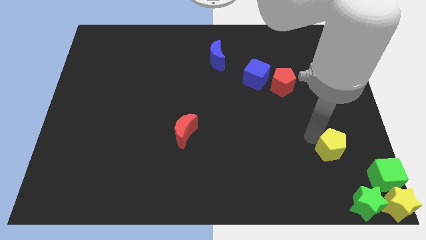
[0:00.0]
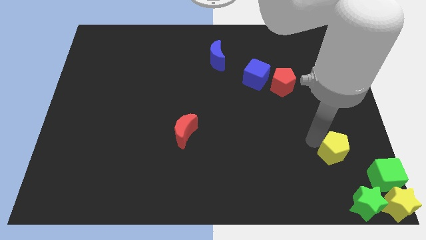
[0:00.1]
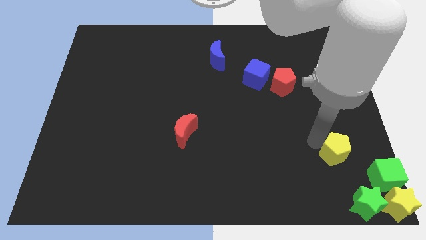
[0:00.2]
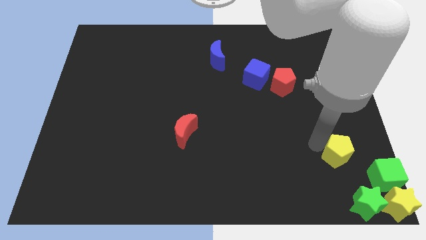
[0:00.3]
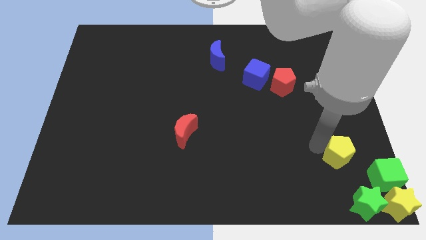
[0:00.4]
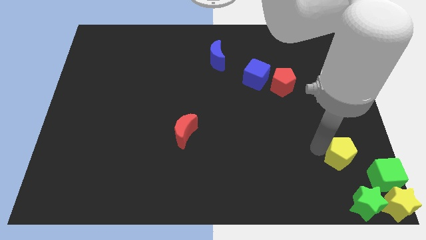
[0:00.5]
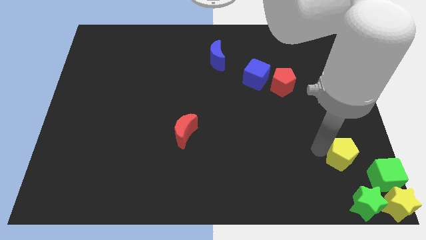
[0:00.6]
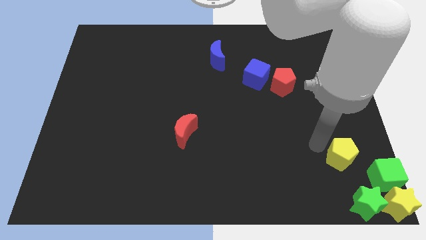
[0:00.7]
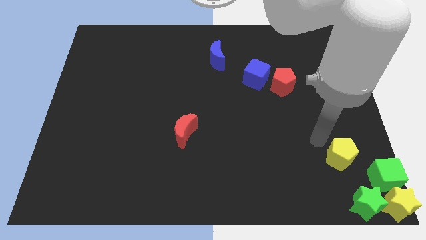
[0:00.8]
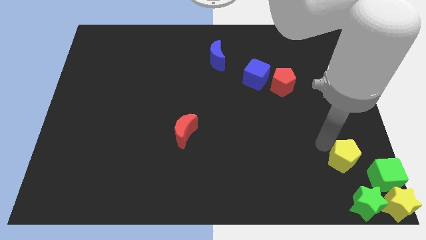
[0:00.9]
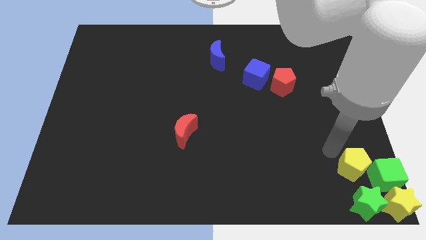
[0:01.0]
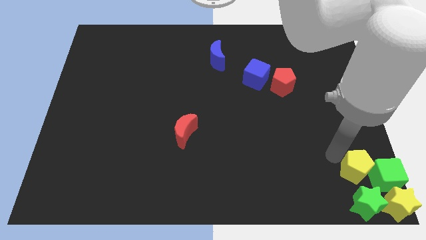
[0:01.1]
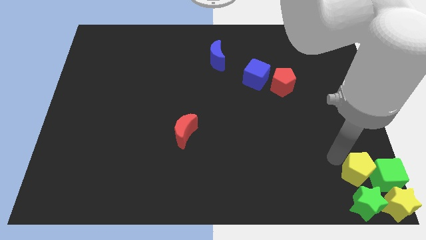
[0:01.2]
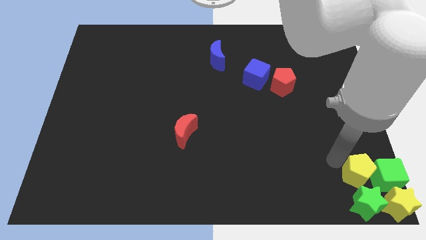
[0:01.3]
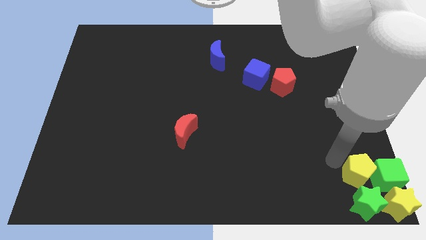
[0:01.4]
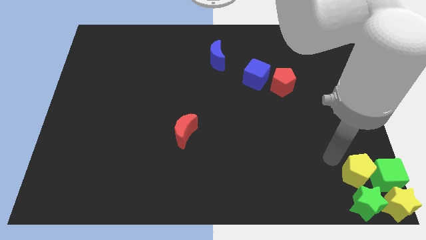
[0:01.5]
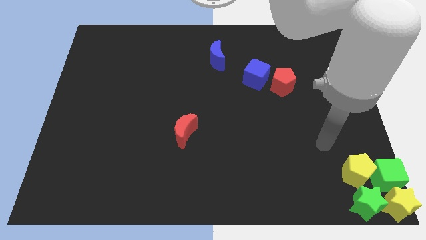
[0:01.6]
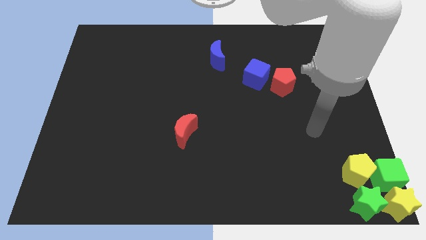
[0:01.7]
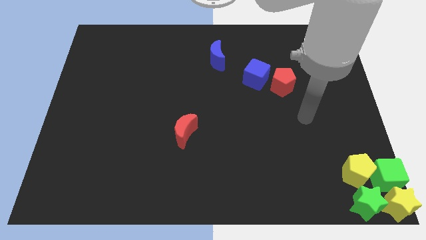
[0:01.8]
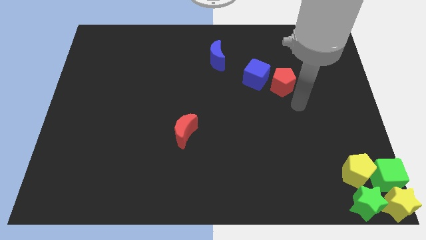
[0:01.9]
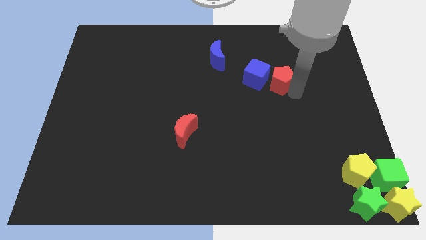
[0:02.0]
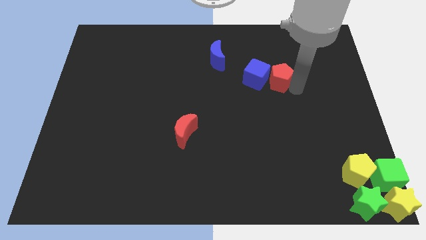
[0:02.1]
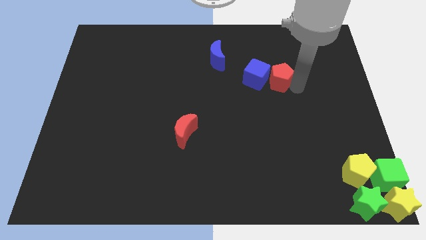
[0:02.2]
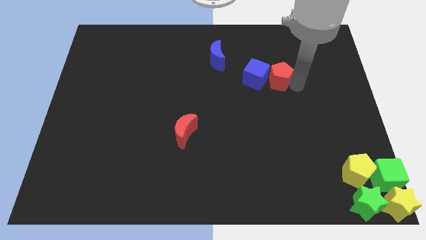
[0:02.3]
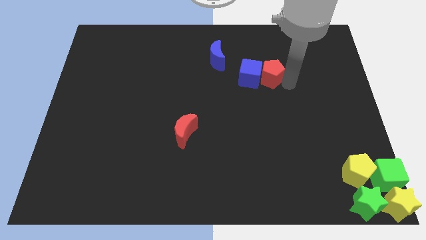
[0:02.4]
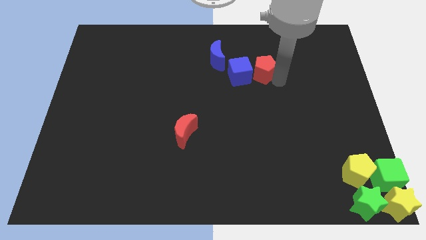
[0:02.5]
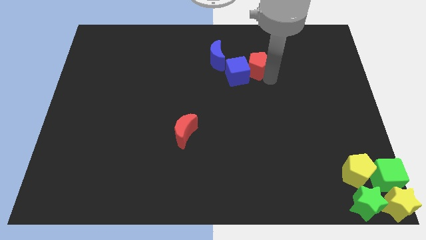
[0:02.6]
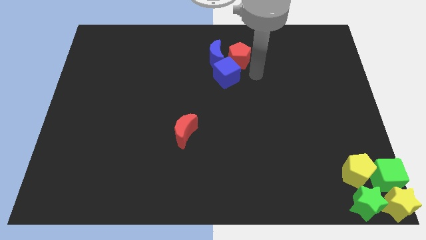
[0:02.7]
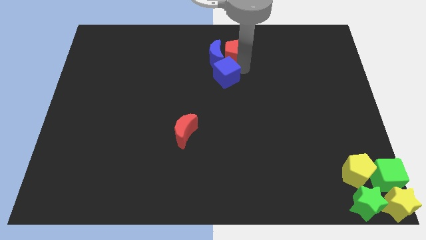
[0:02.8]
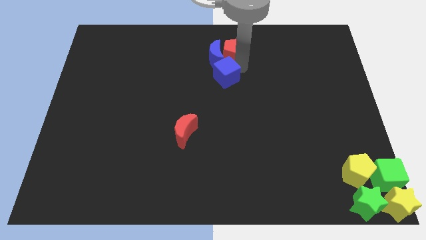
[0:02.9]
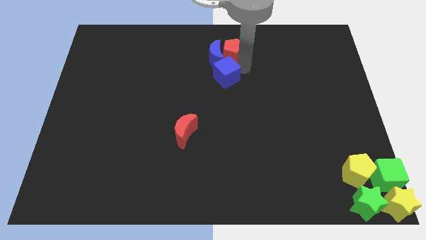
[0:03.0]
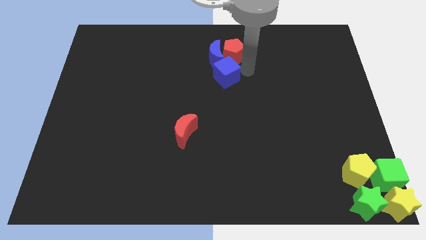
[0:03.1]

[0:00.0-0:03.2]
move the arm away from the yellow pentagon

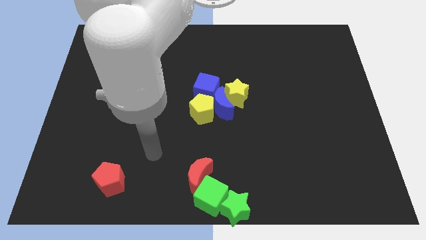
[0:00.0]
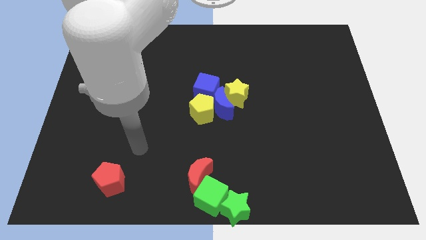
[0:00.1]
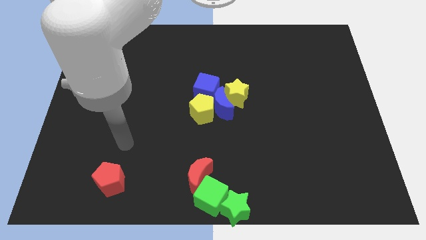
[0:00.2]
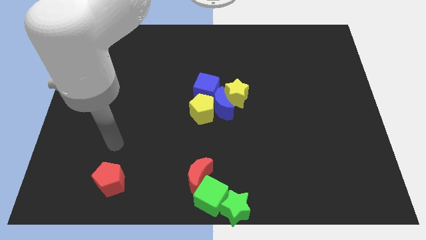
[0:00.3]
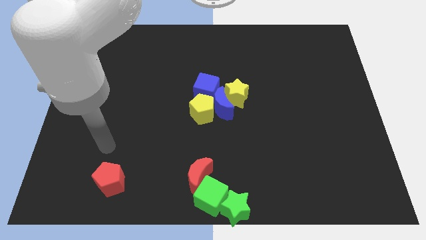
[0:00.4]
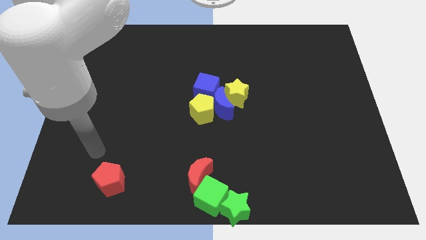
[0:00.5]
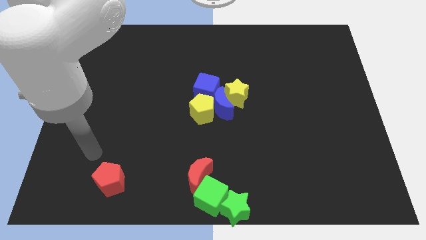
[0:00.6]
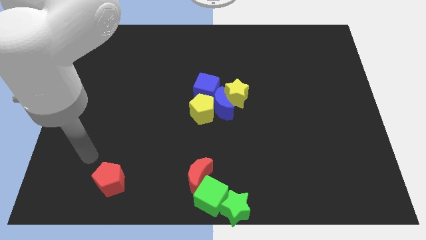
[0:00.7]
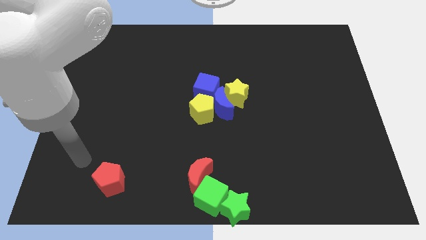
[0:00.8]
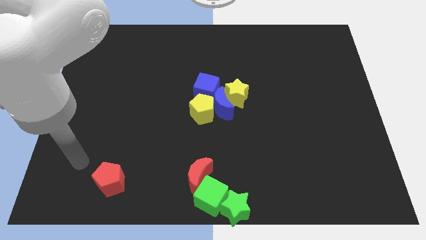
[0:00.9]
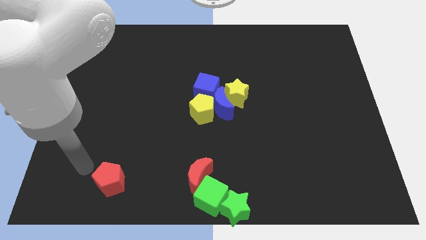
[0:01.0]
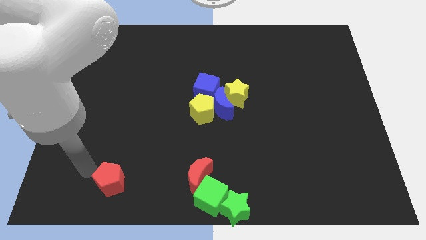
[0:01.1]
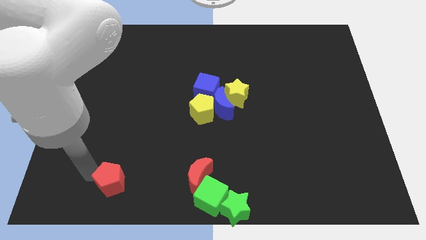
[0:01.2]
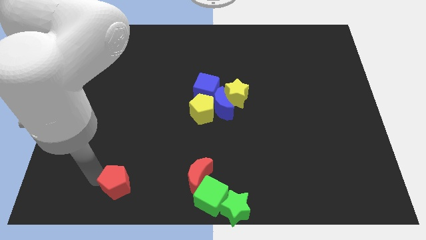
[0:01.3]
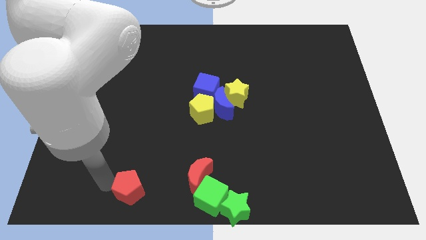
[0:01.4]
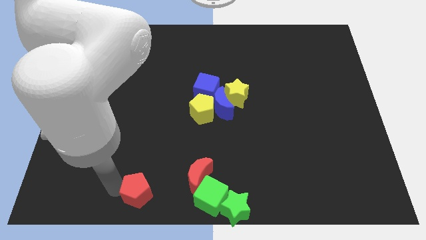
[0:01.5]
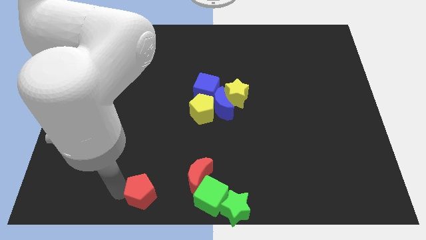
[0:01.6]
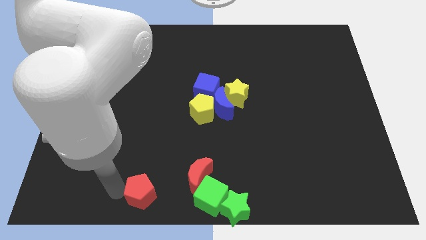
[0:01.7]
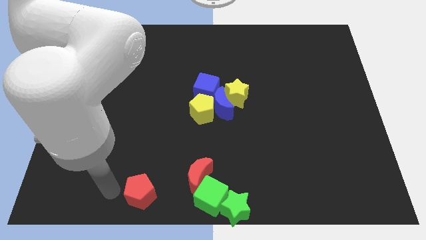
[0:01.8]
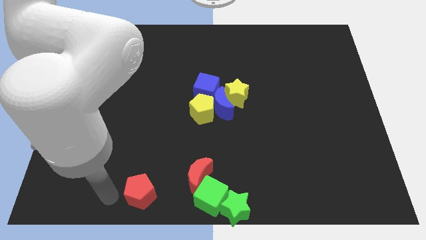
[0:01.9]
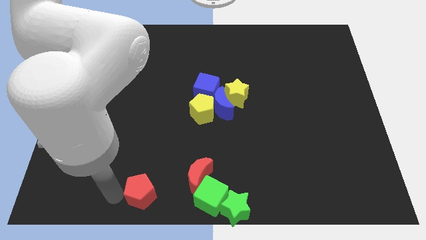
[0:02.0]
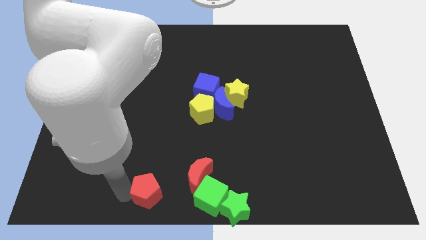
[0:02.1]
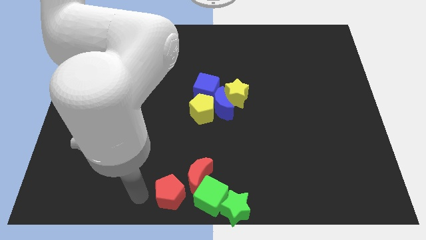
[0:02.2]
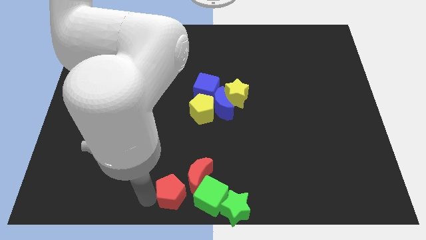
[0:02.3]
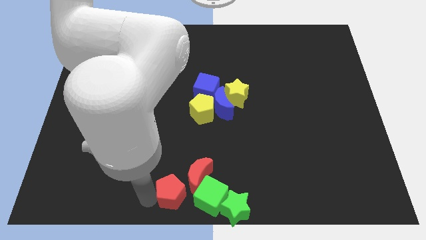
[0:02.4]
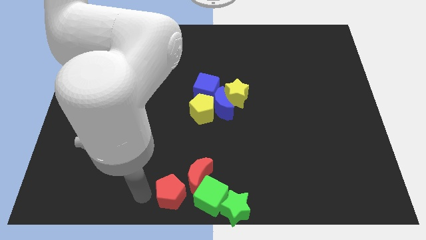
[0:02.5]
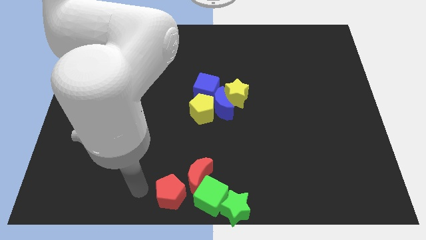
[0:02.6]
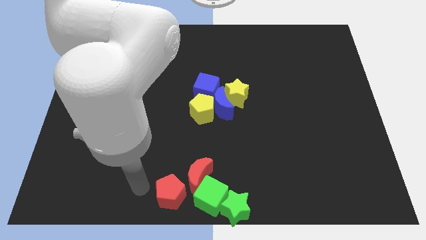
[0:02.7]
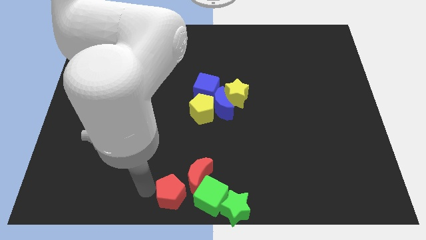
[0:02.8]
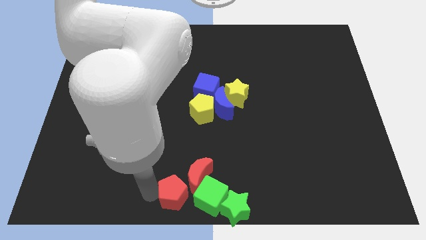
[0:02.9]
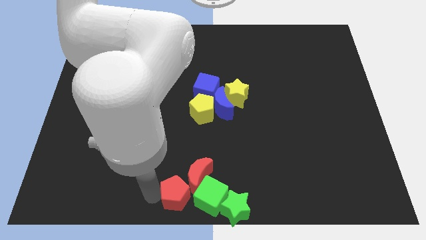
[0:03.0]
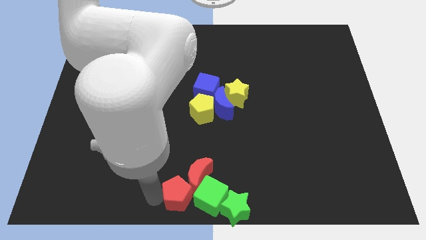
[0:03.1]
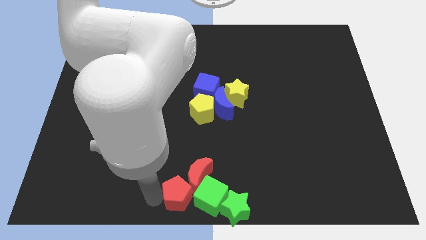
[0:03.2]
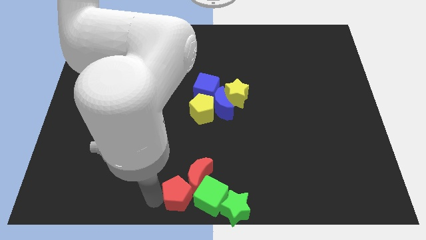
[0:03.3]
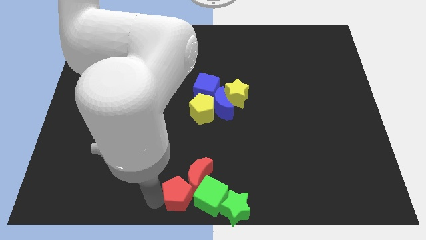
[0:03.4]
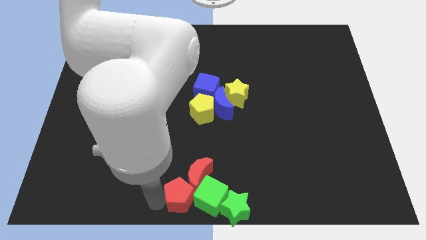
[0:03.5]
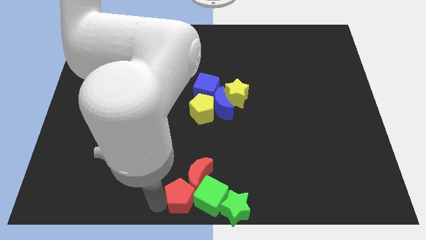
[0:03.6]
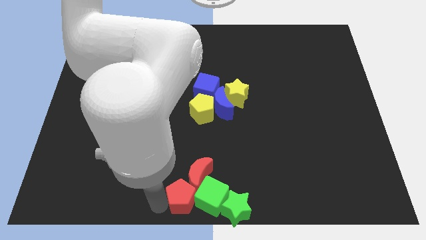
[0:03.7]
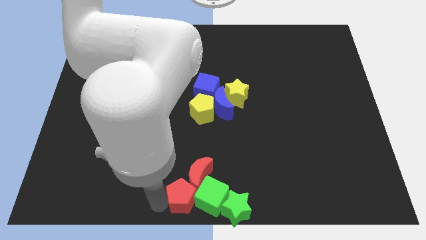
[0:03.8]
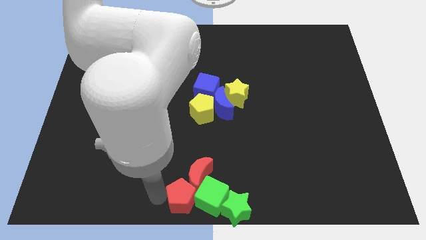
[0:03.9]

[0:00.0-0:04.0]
slide the red pentagon into the green cube

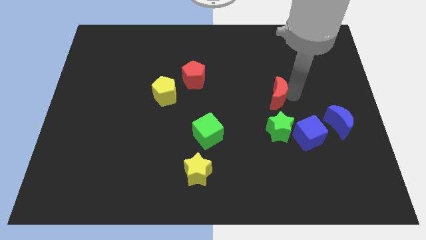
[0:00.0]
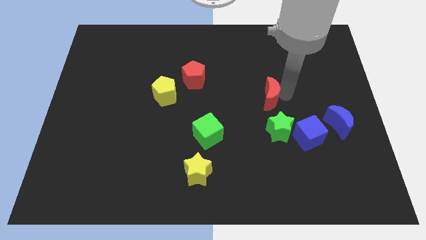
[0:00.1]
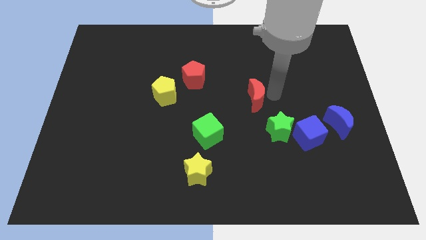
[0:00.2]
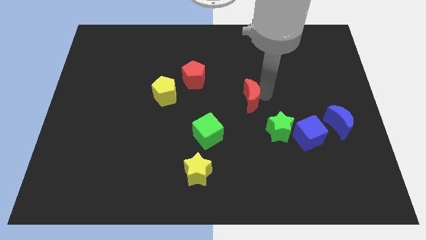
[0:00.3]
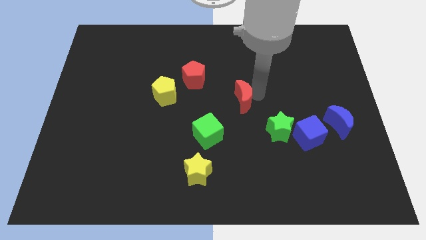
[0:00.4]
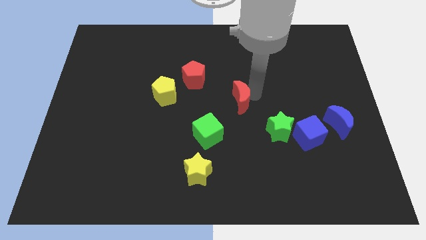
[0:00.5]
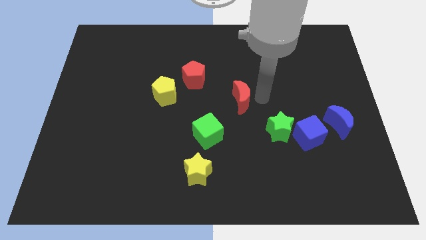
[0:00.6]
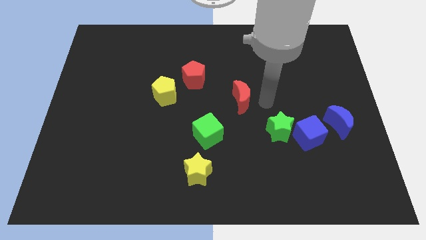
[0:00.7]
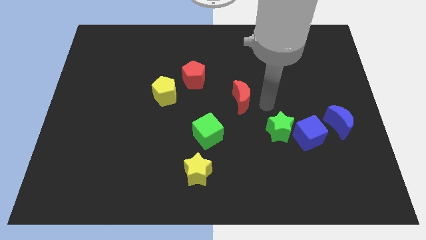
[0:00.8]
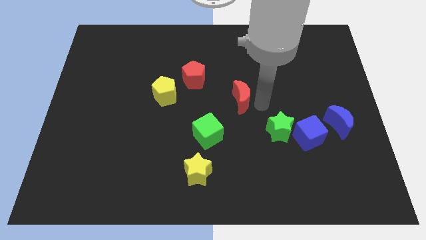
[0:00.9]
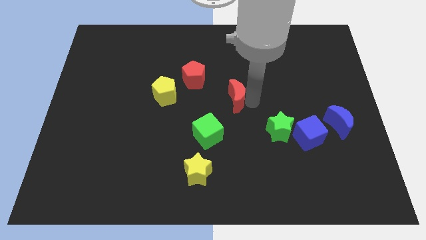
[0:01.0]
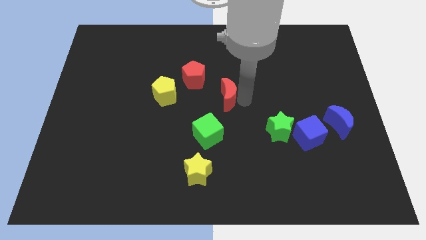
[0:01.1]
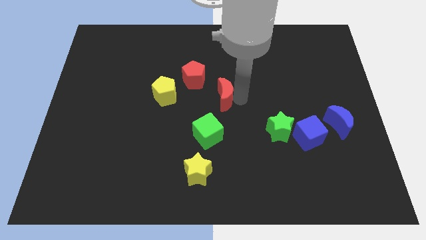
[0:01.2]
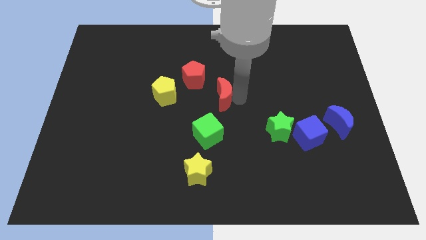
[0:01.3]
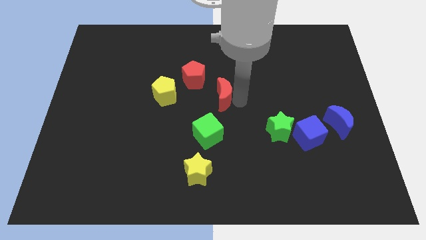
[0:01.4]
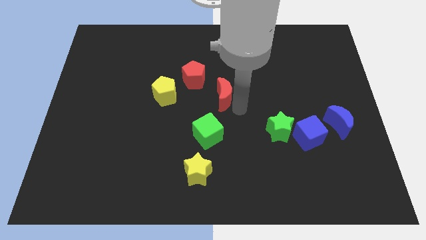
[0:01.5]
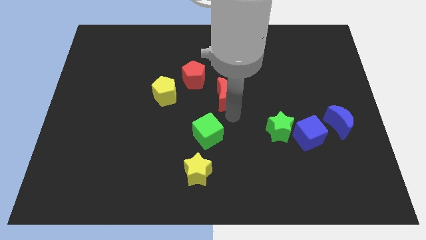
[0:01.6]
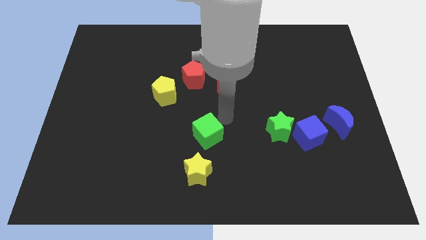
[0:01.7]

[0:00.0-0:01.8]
move the red moon slightly to the left side of the board
